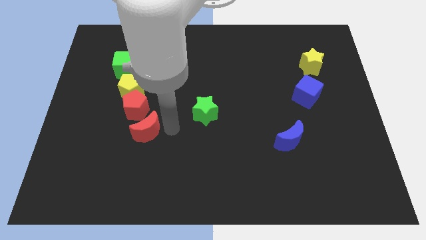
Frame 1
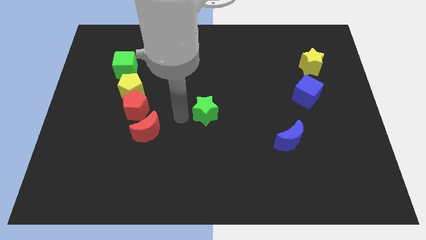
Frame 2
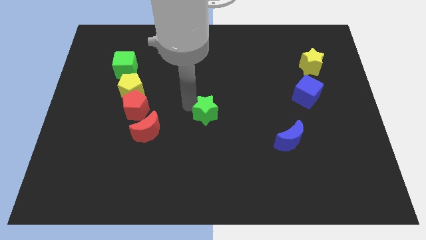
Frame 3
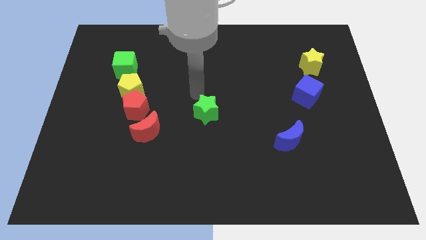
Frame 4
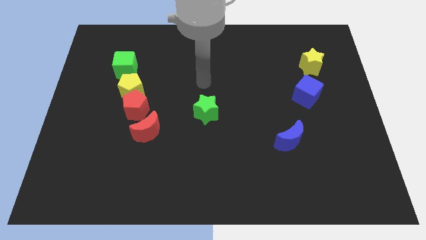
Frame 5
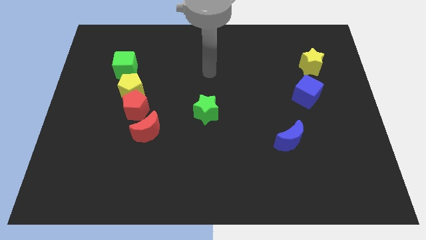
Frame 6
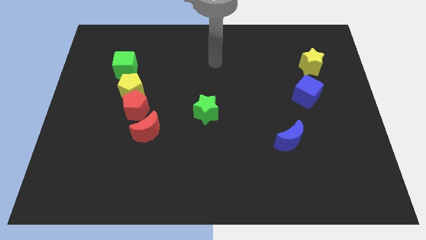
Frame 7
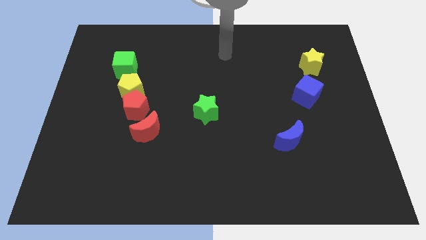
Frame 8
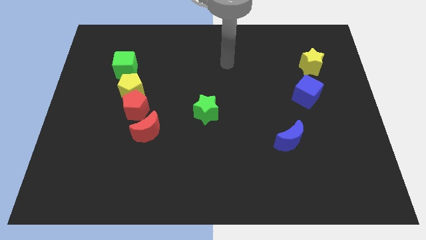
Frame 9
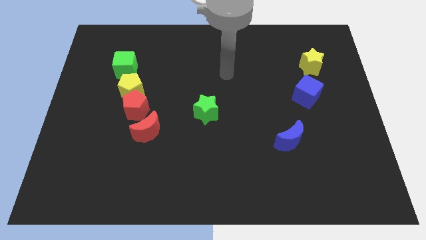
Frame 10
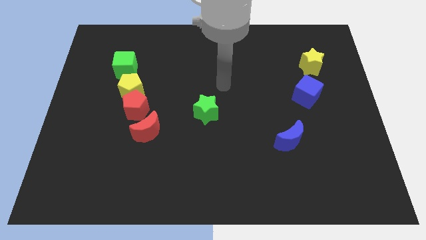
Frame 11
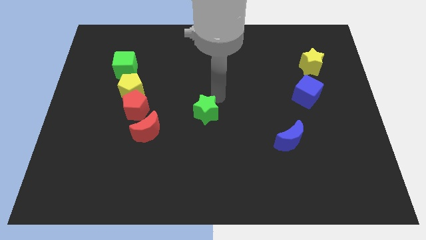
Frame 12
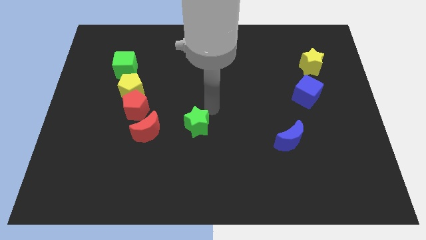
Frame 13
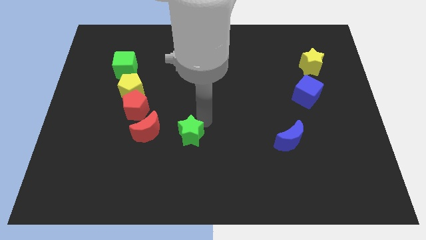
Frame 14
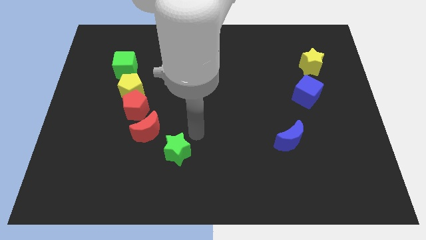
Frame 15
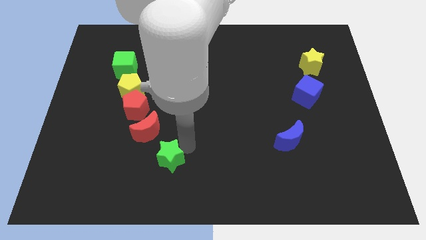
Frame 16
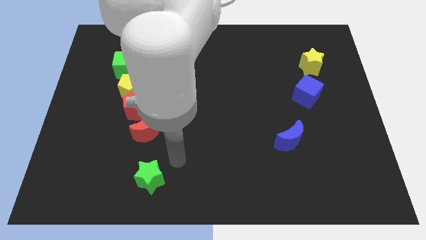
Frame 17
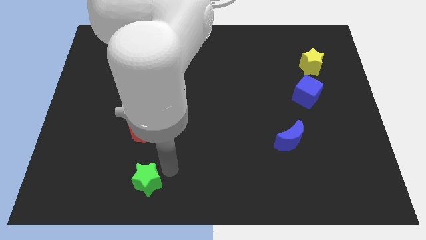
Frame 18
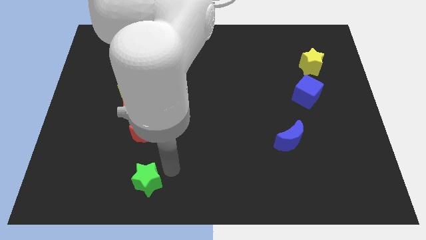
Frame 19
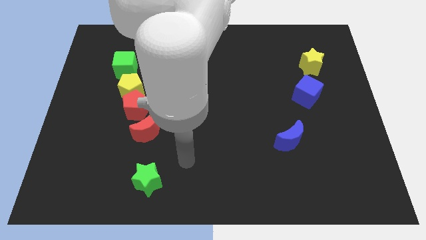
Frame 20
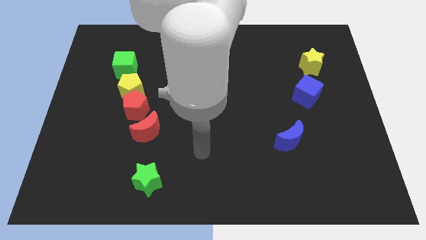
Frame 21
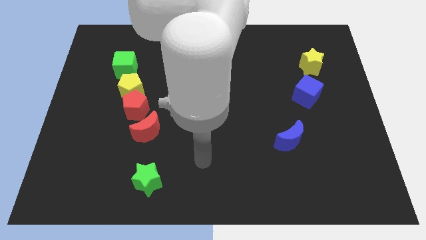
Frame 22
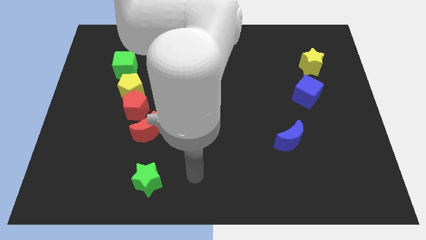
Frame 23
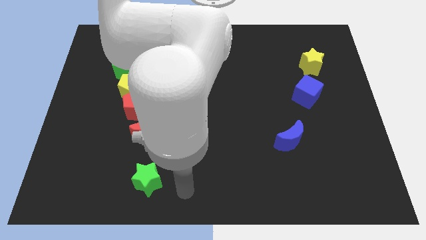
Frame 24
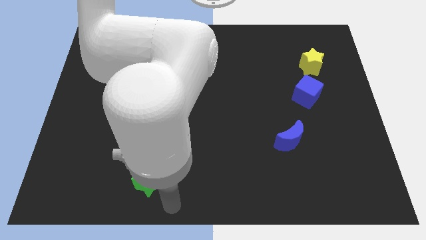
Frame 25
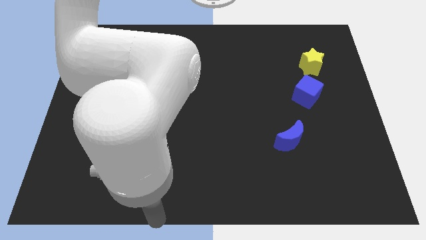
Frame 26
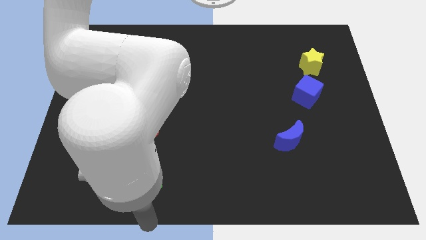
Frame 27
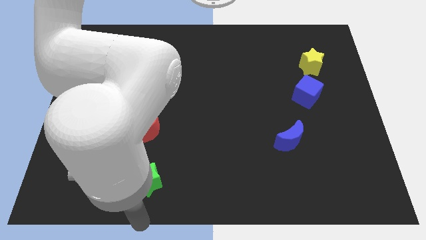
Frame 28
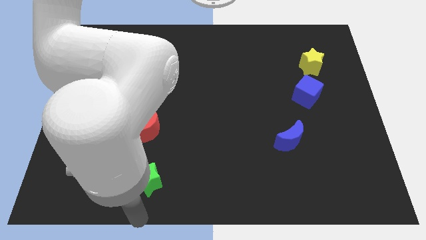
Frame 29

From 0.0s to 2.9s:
move the green star below the red crescent

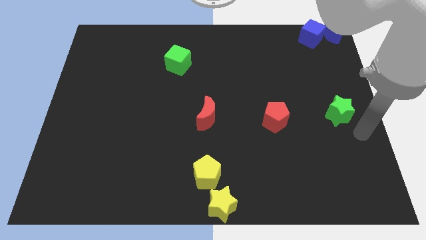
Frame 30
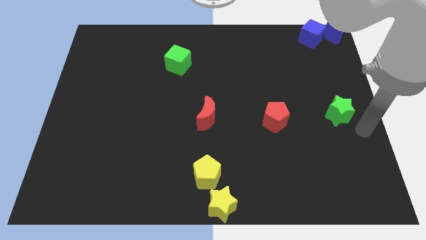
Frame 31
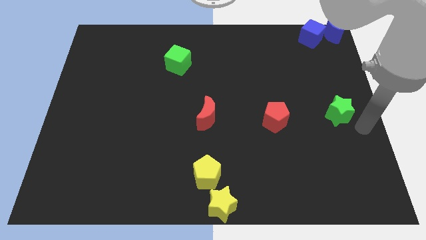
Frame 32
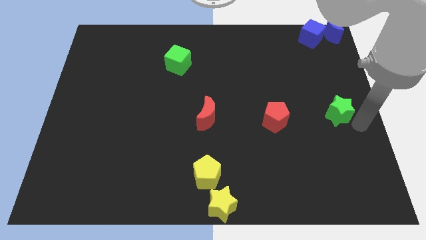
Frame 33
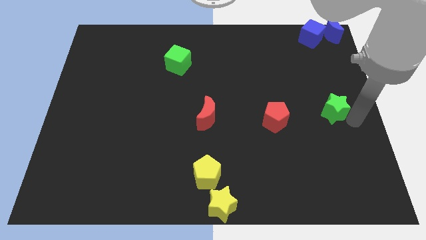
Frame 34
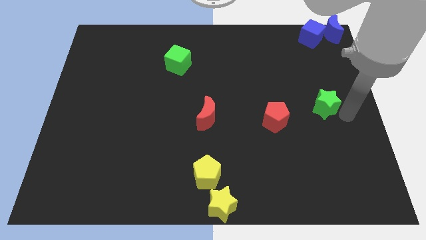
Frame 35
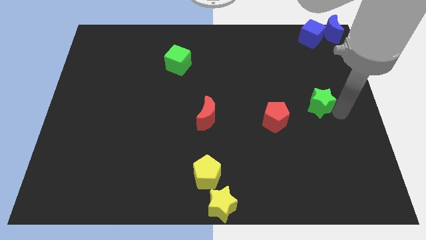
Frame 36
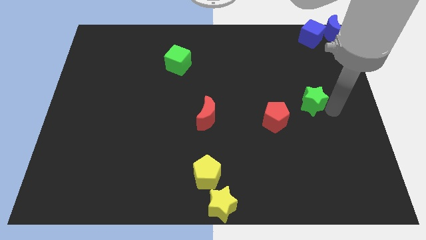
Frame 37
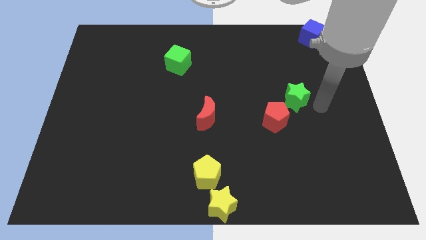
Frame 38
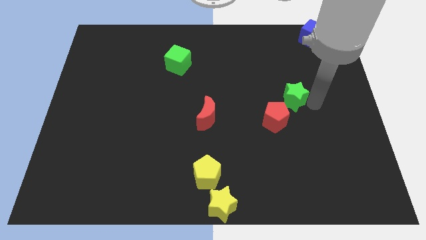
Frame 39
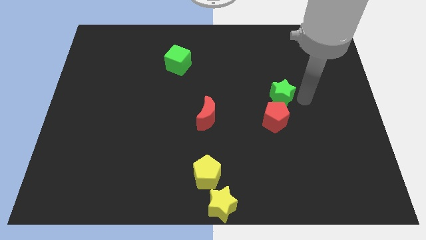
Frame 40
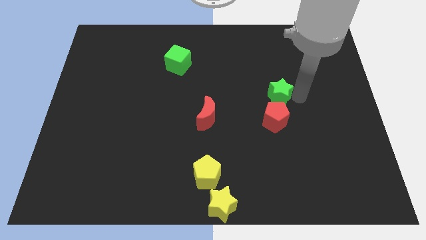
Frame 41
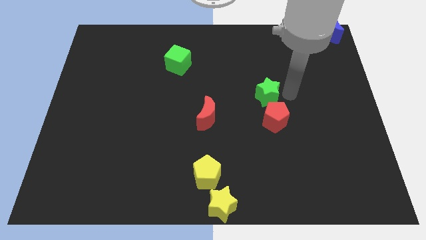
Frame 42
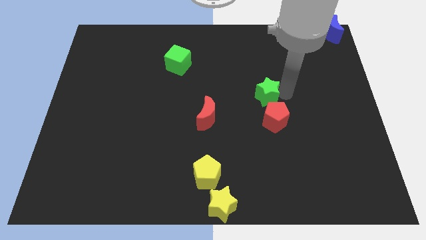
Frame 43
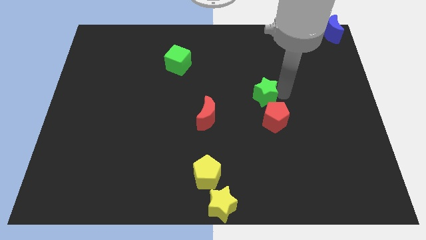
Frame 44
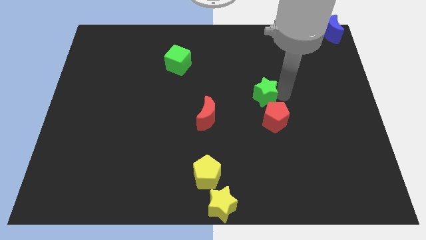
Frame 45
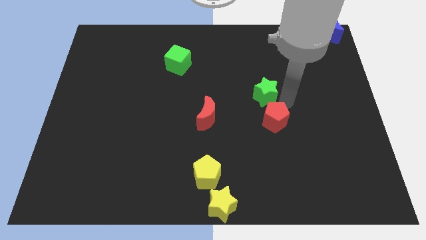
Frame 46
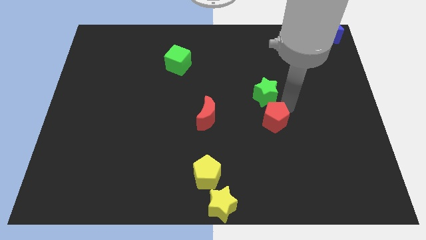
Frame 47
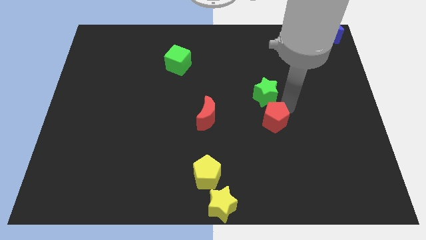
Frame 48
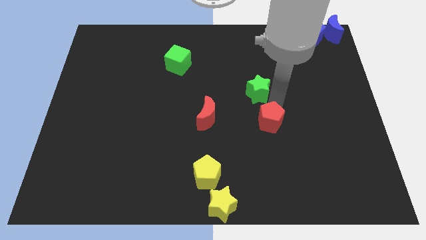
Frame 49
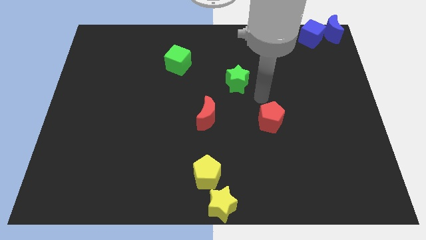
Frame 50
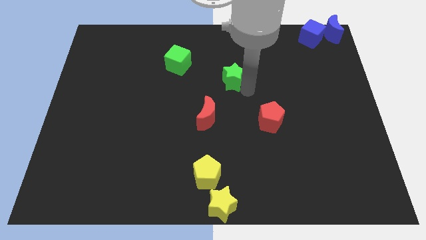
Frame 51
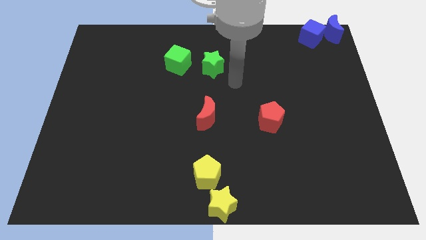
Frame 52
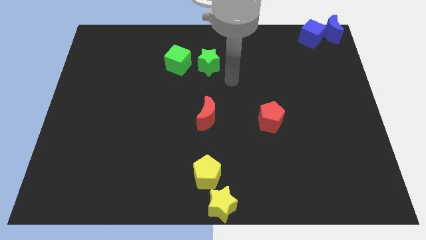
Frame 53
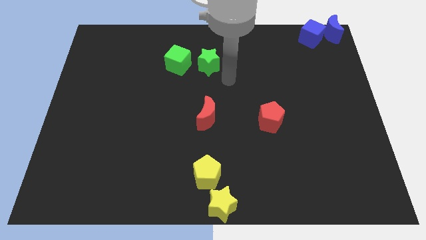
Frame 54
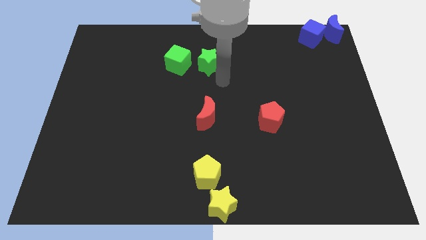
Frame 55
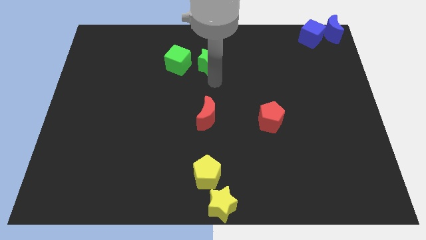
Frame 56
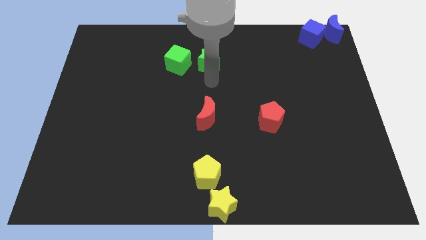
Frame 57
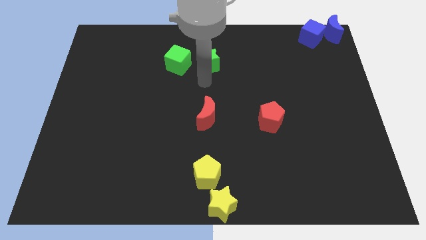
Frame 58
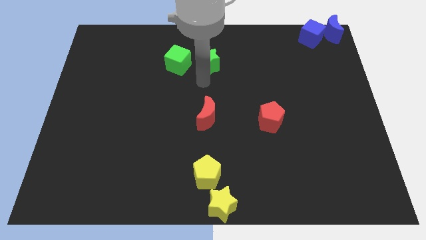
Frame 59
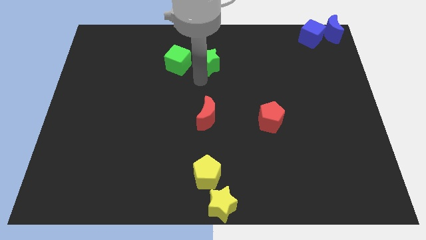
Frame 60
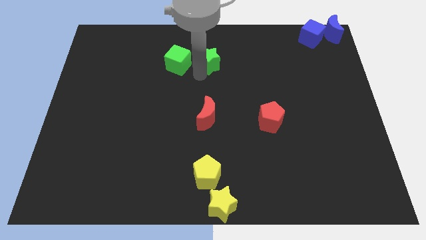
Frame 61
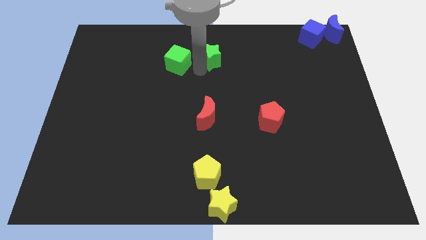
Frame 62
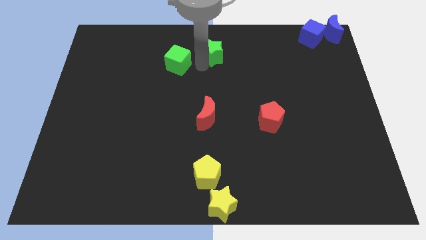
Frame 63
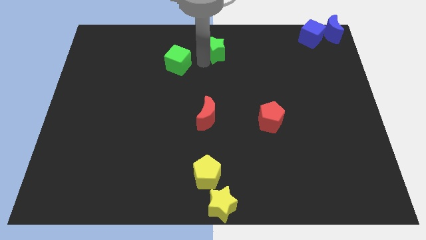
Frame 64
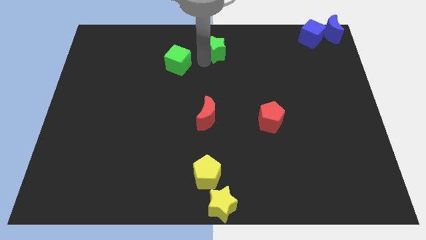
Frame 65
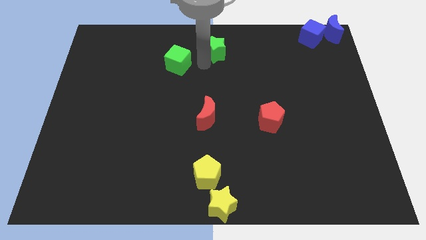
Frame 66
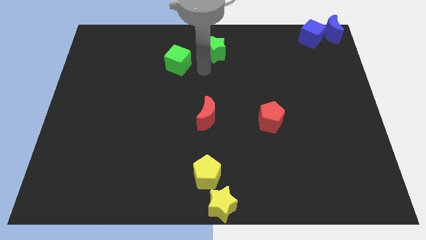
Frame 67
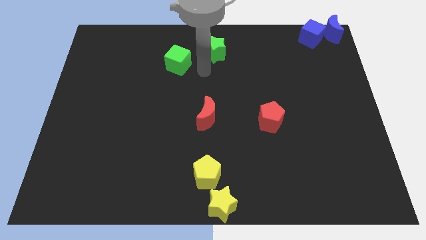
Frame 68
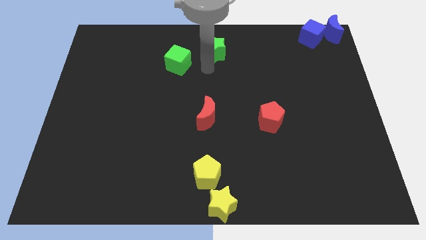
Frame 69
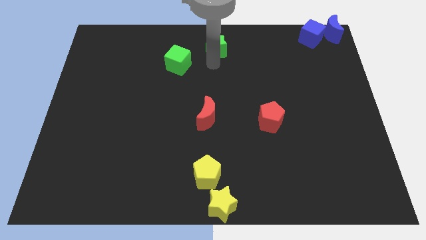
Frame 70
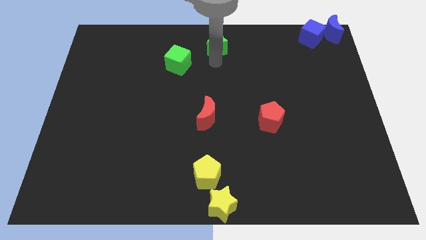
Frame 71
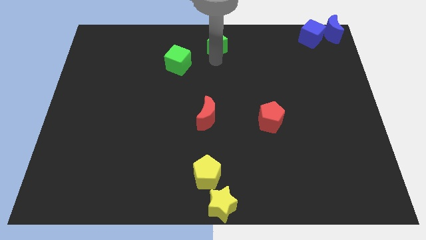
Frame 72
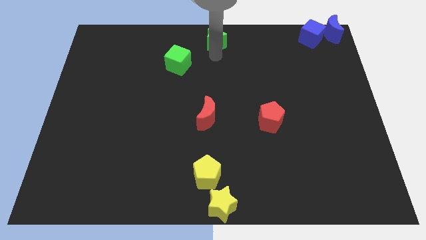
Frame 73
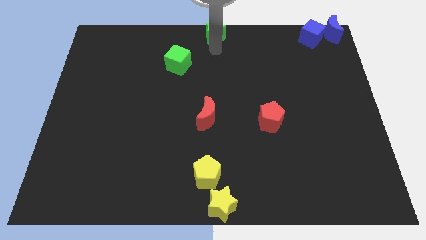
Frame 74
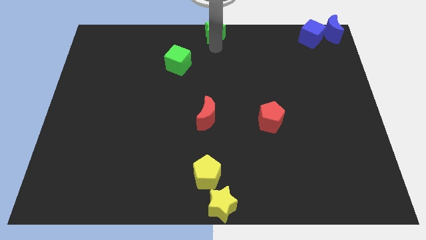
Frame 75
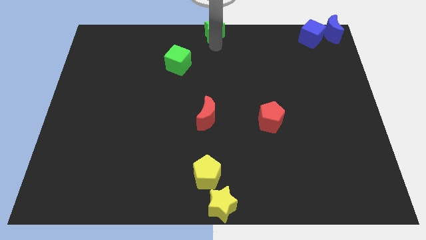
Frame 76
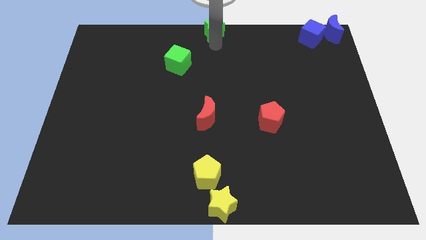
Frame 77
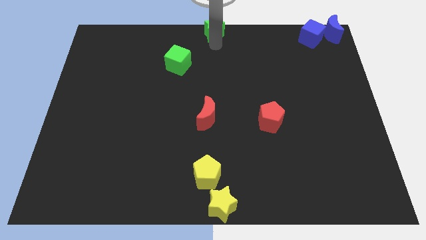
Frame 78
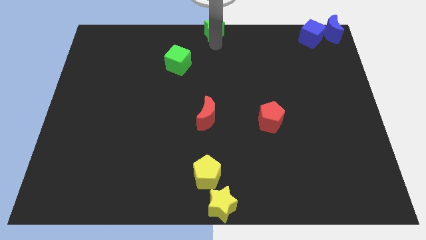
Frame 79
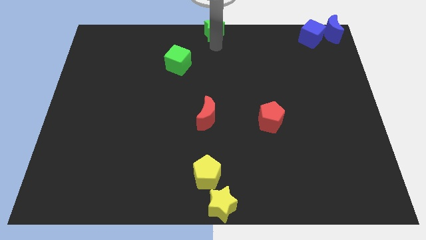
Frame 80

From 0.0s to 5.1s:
push the green star to the top center of the board

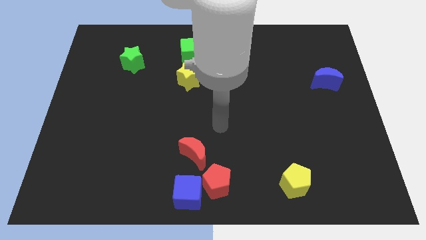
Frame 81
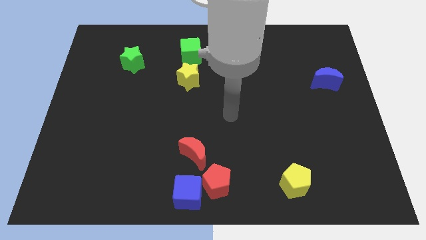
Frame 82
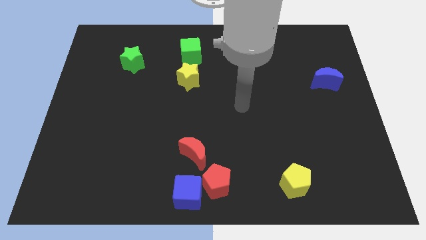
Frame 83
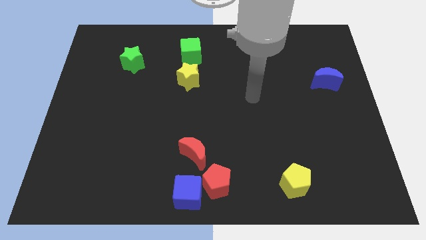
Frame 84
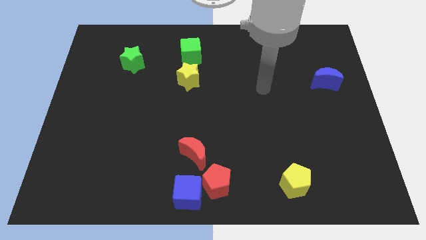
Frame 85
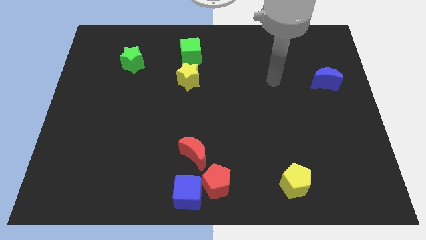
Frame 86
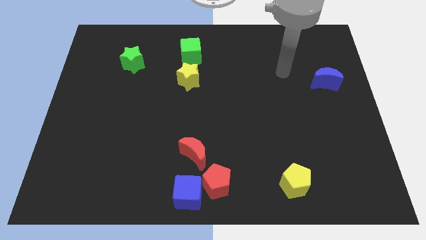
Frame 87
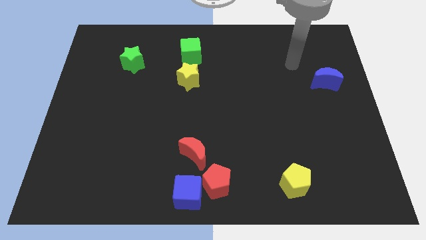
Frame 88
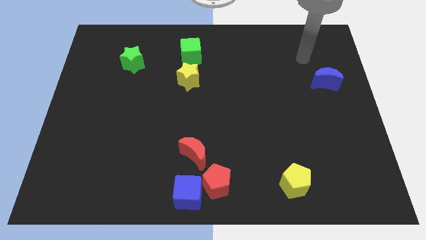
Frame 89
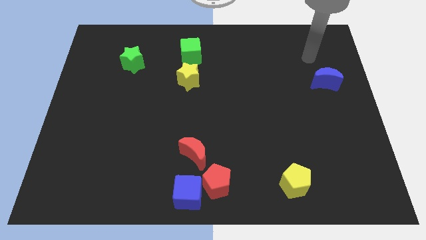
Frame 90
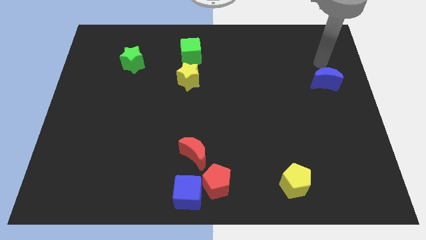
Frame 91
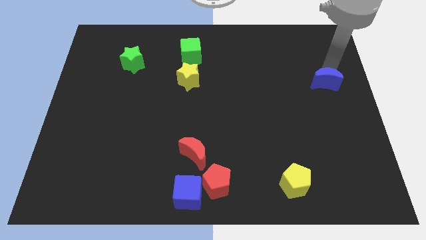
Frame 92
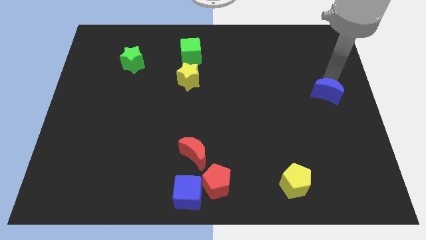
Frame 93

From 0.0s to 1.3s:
point your arm at the top of the blue crescent
